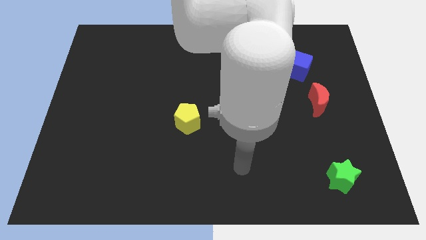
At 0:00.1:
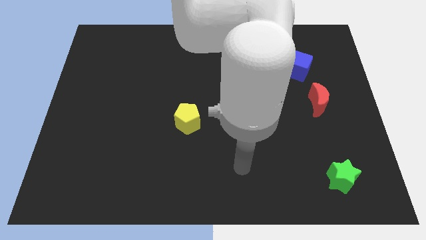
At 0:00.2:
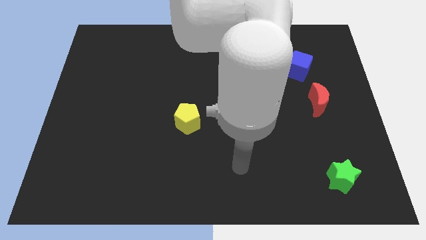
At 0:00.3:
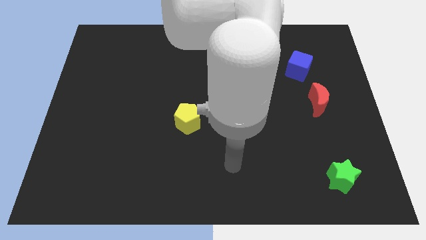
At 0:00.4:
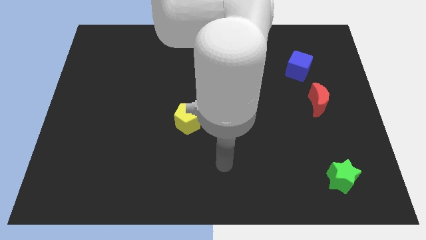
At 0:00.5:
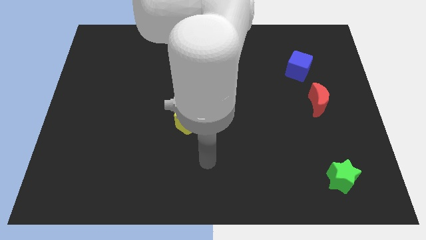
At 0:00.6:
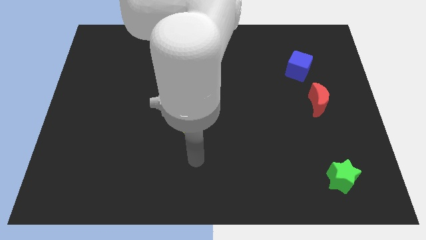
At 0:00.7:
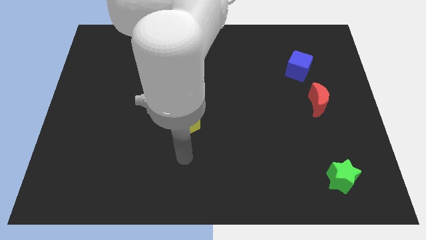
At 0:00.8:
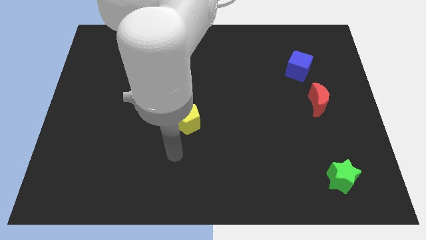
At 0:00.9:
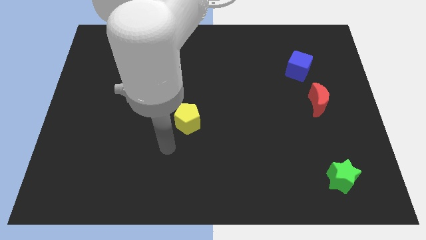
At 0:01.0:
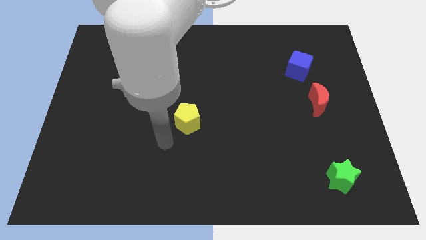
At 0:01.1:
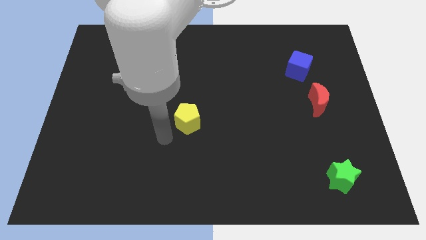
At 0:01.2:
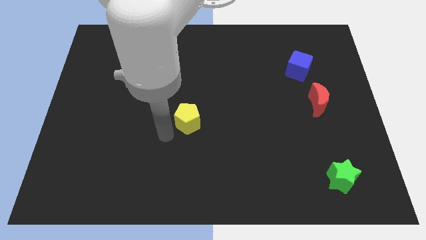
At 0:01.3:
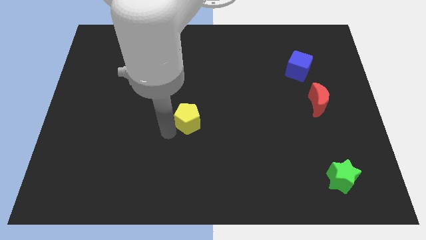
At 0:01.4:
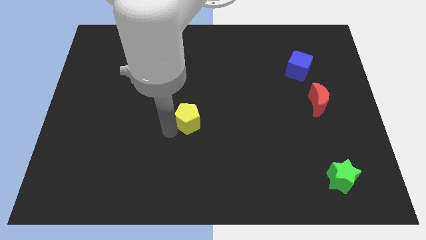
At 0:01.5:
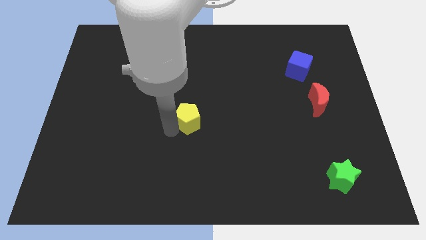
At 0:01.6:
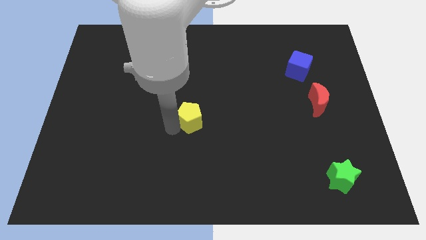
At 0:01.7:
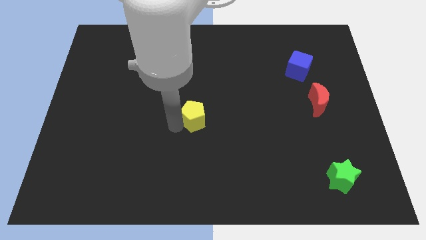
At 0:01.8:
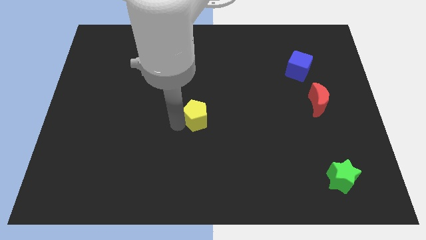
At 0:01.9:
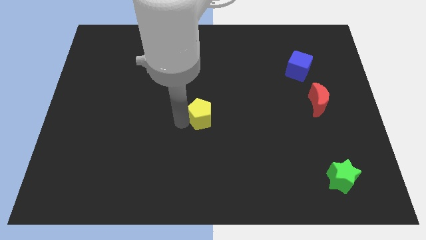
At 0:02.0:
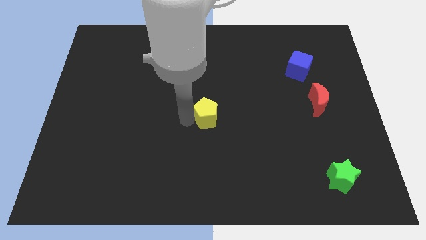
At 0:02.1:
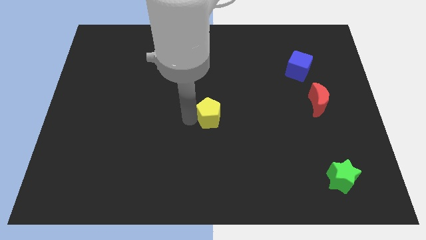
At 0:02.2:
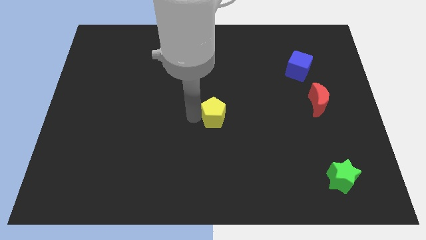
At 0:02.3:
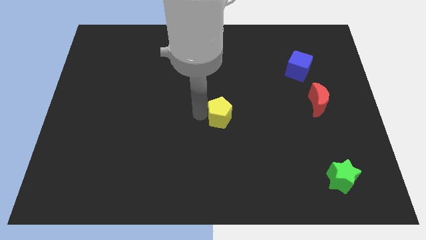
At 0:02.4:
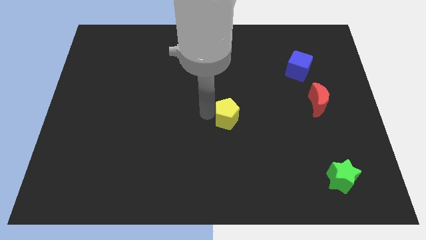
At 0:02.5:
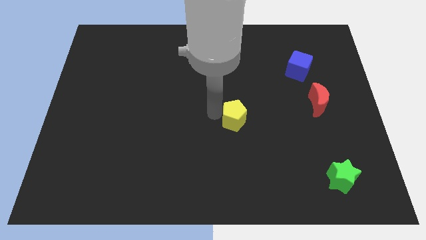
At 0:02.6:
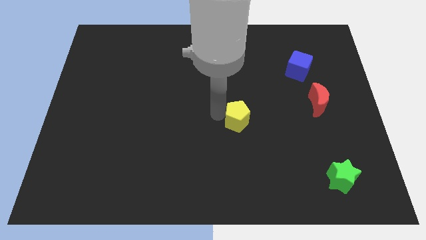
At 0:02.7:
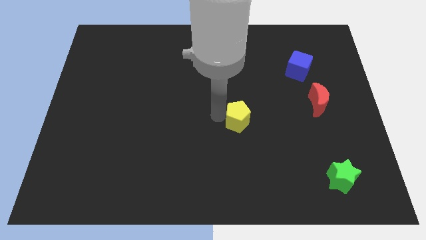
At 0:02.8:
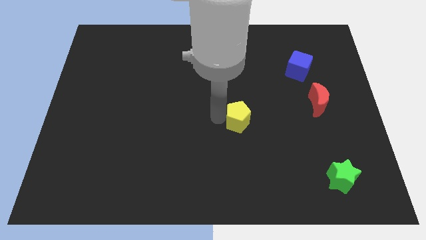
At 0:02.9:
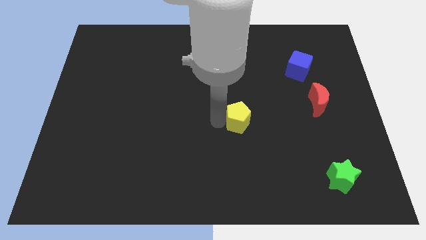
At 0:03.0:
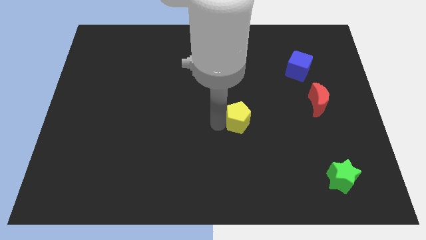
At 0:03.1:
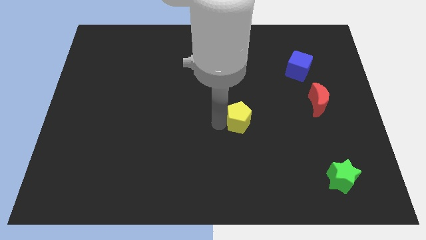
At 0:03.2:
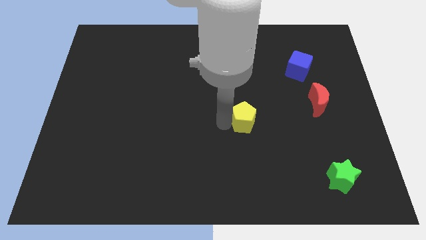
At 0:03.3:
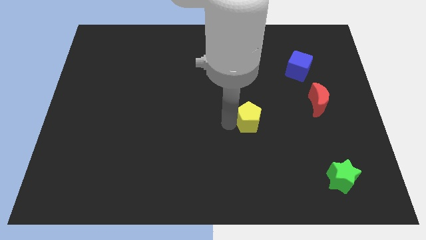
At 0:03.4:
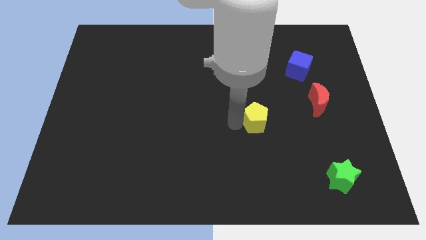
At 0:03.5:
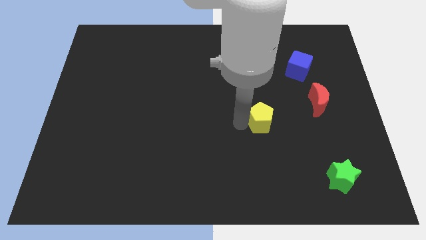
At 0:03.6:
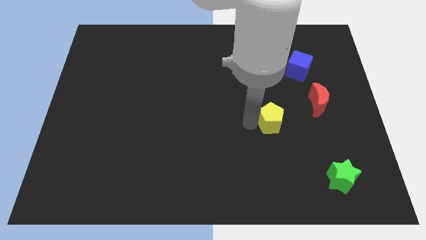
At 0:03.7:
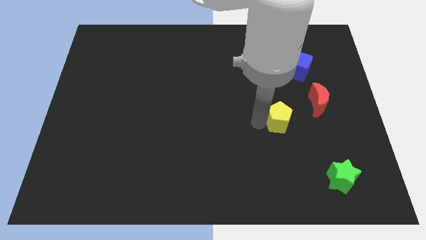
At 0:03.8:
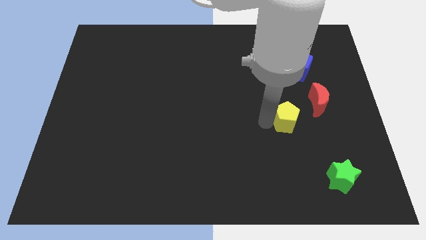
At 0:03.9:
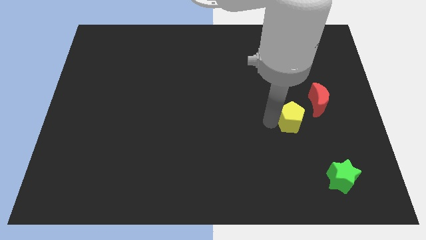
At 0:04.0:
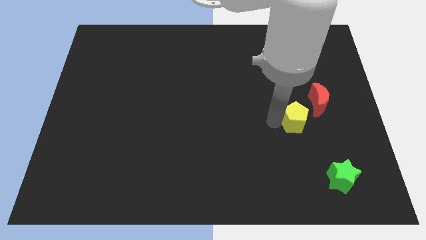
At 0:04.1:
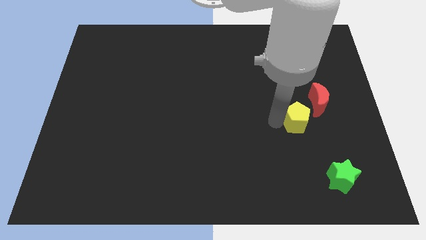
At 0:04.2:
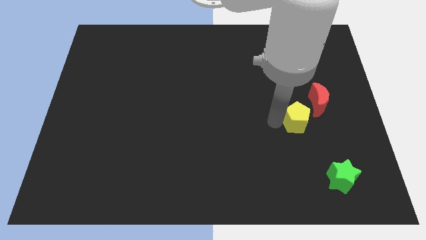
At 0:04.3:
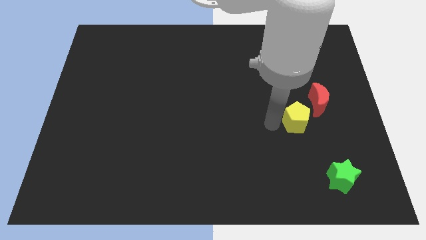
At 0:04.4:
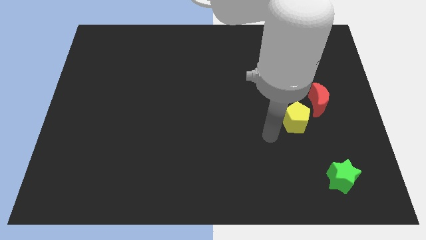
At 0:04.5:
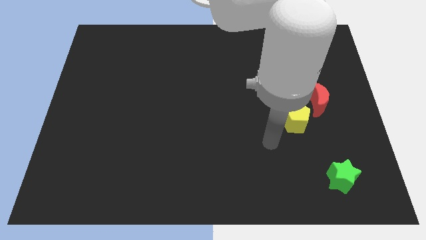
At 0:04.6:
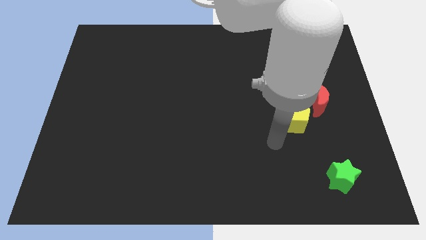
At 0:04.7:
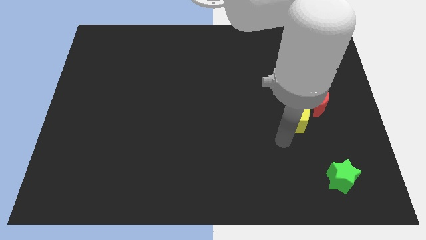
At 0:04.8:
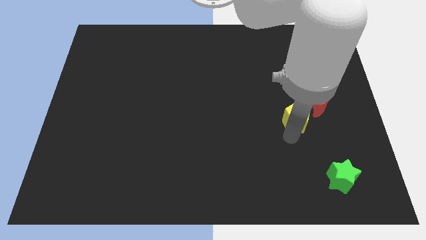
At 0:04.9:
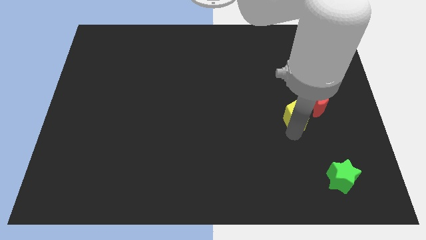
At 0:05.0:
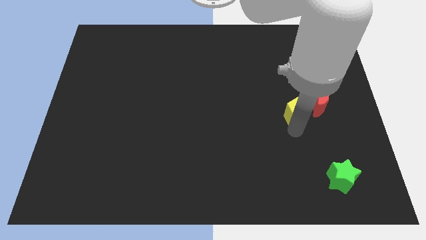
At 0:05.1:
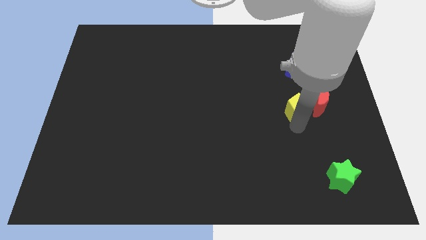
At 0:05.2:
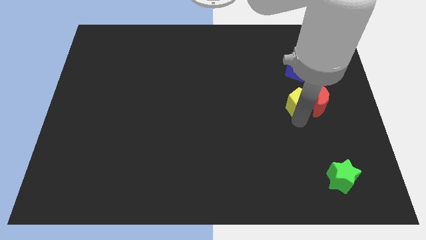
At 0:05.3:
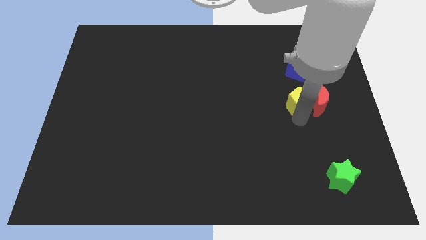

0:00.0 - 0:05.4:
slide the pentagon close to the red block

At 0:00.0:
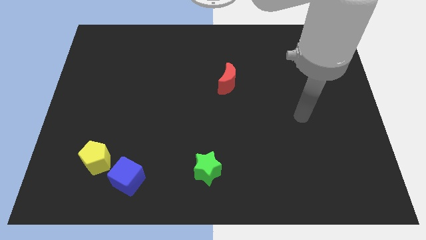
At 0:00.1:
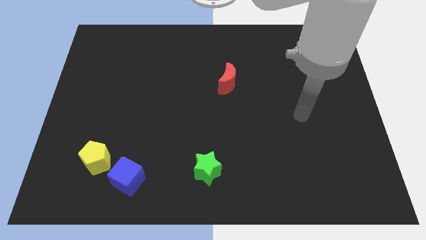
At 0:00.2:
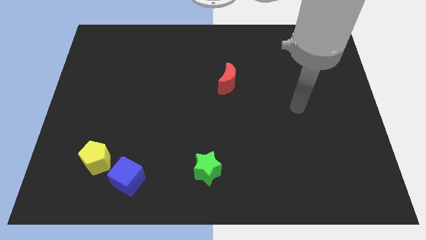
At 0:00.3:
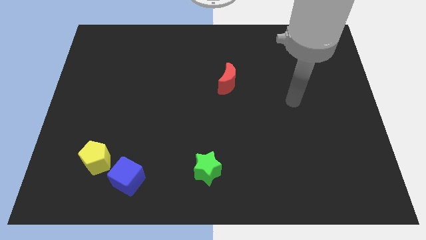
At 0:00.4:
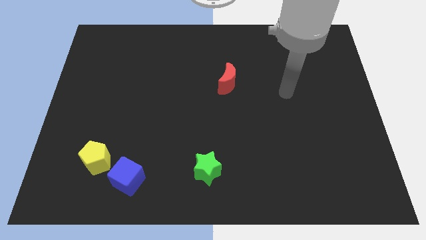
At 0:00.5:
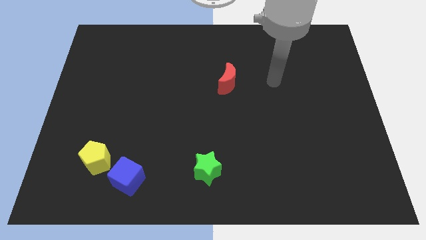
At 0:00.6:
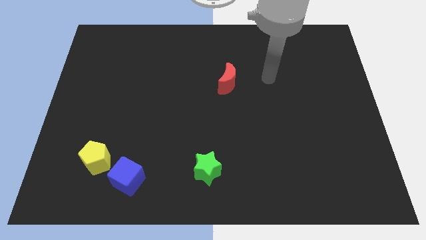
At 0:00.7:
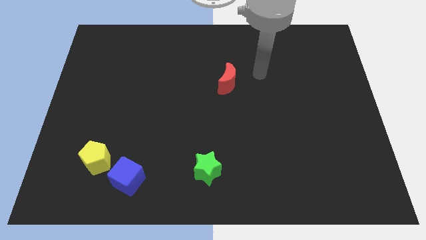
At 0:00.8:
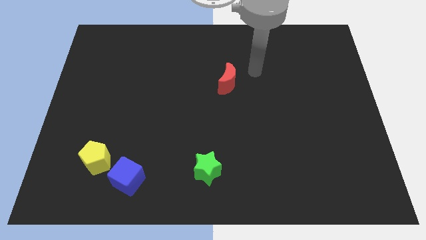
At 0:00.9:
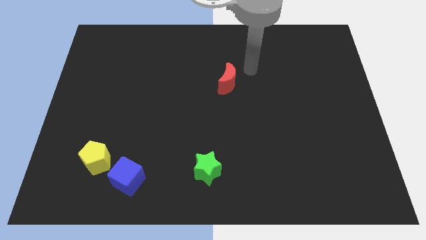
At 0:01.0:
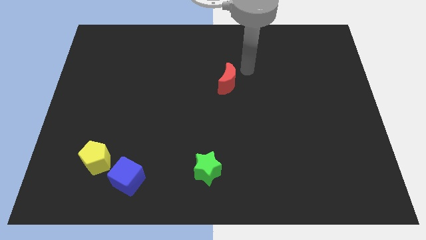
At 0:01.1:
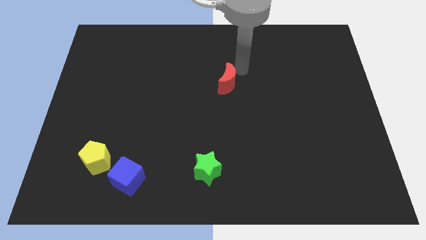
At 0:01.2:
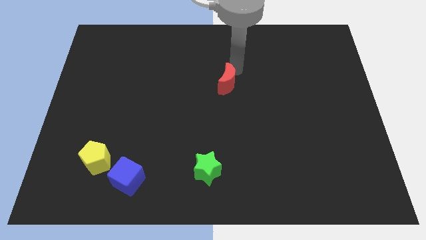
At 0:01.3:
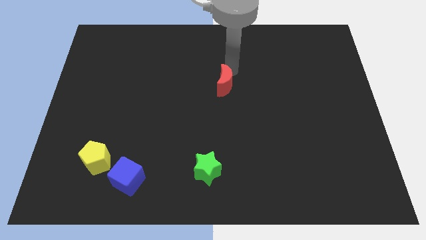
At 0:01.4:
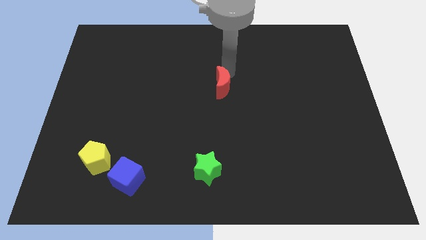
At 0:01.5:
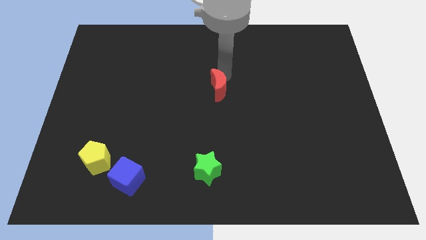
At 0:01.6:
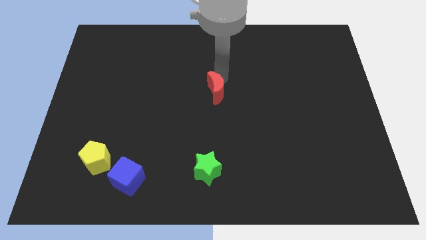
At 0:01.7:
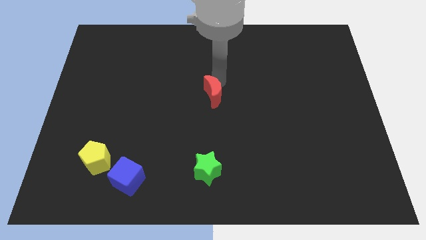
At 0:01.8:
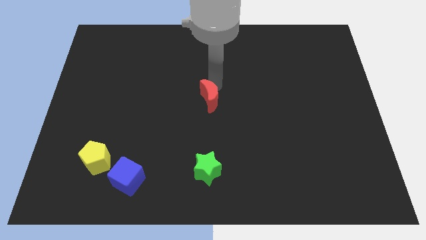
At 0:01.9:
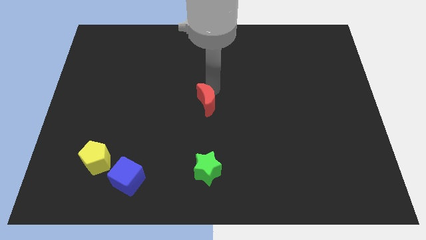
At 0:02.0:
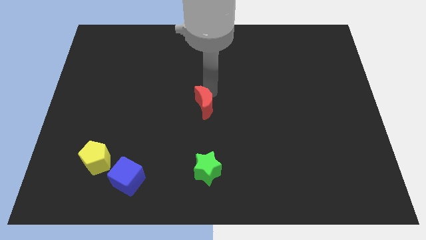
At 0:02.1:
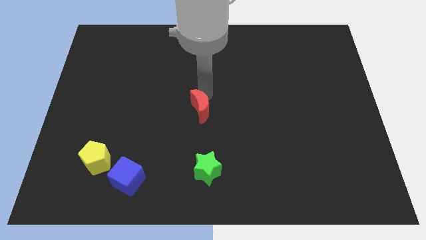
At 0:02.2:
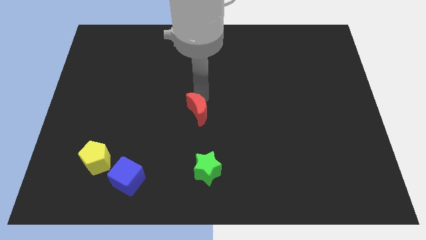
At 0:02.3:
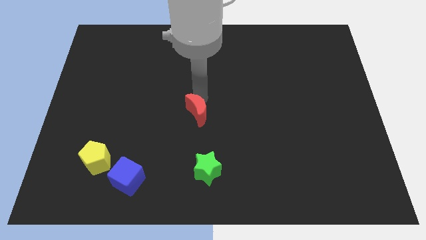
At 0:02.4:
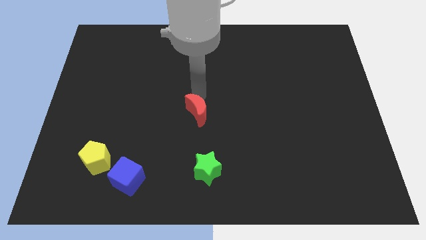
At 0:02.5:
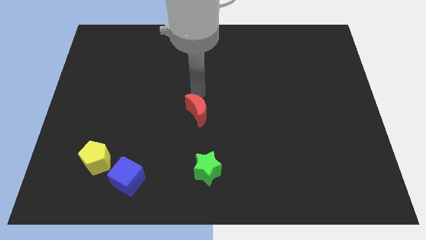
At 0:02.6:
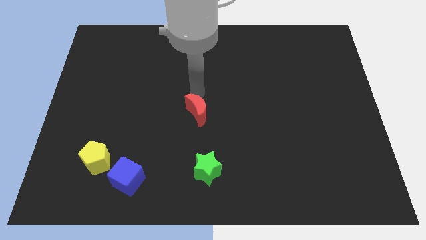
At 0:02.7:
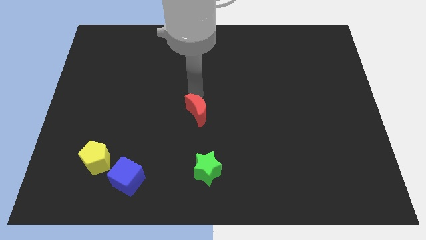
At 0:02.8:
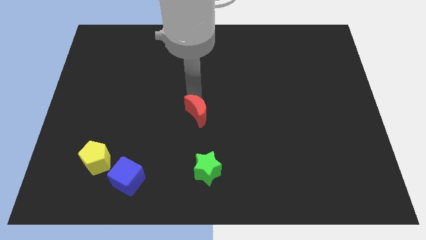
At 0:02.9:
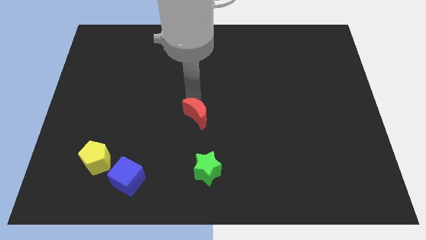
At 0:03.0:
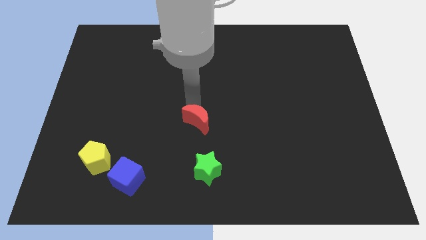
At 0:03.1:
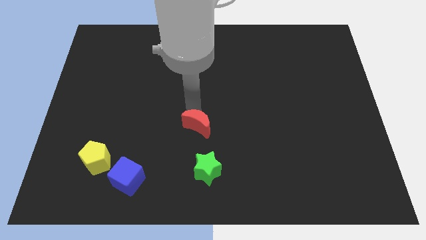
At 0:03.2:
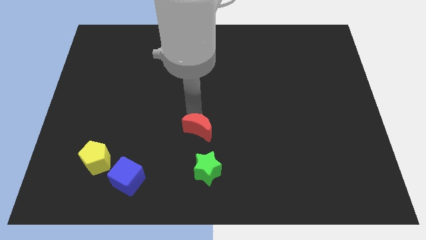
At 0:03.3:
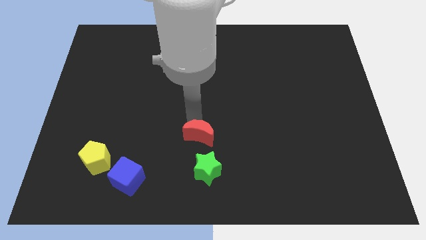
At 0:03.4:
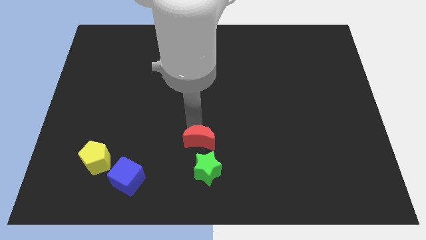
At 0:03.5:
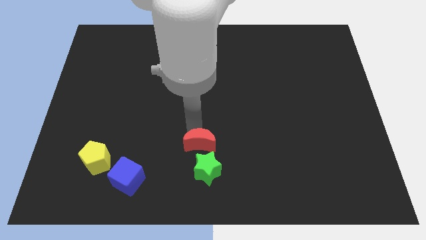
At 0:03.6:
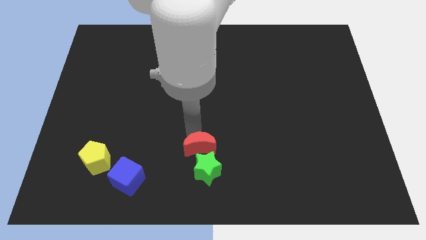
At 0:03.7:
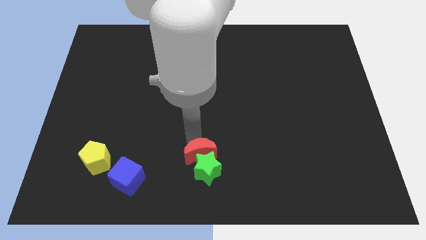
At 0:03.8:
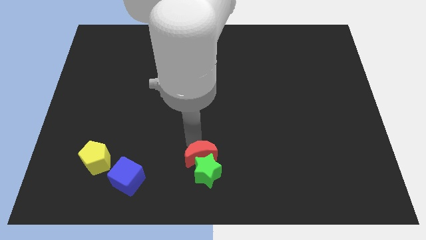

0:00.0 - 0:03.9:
move the red moon close to the green star
